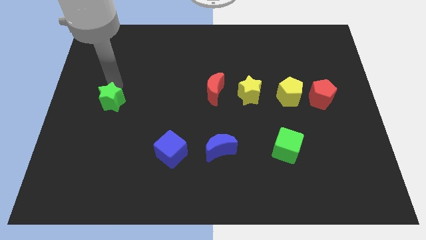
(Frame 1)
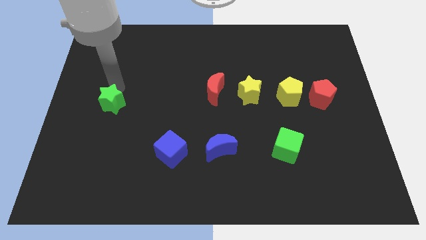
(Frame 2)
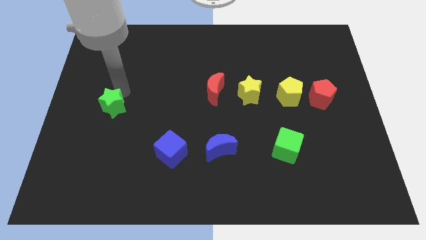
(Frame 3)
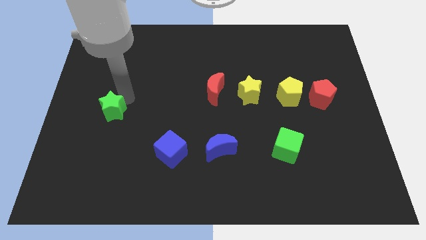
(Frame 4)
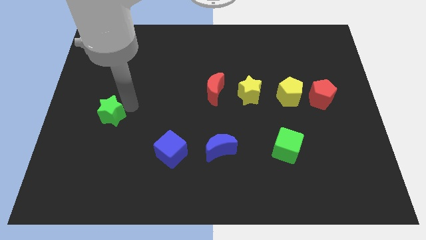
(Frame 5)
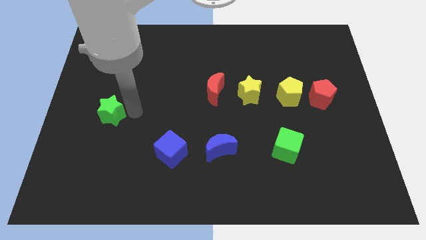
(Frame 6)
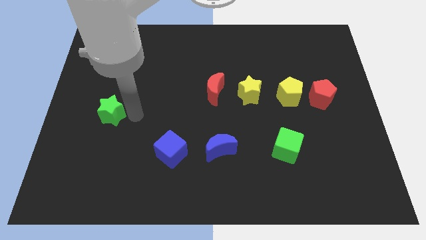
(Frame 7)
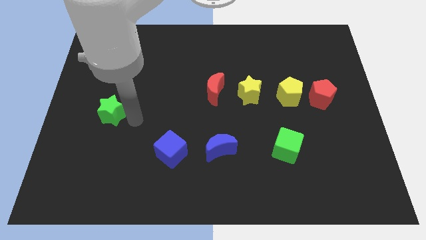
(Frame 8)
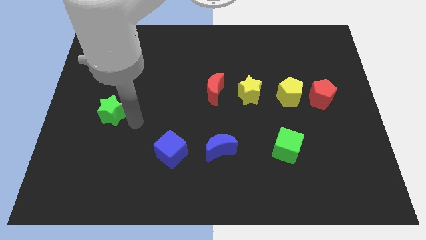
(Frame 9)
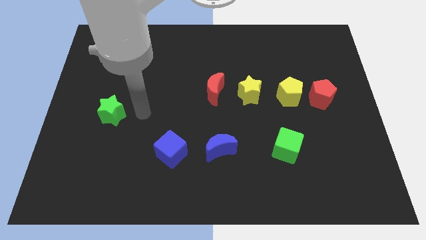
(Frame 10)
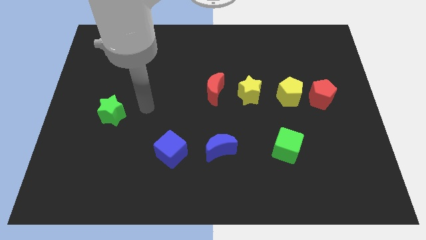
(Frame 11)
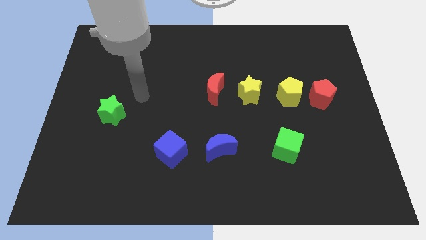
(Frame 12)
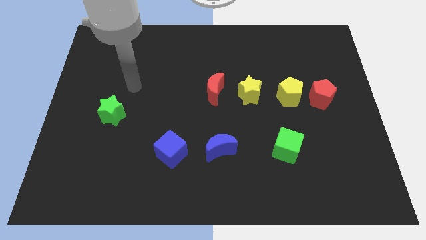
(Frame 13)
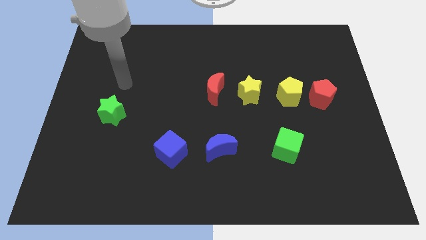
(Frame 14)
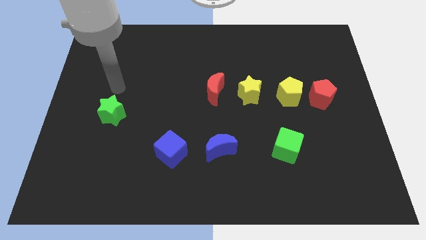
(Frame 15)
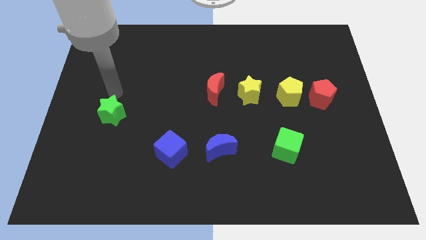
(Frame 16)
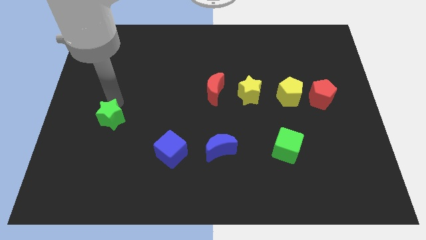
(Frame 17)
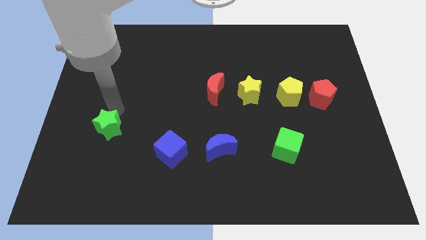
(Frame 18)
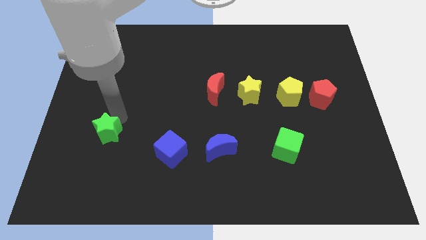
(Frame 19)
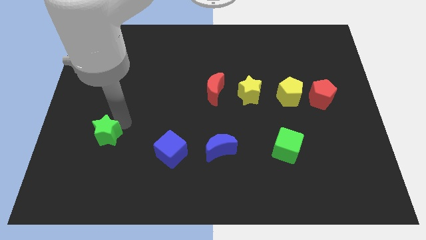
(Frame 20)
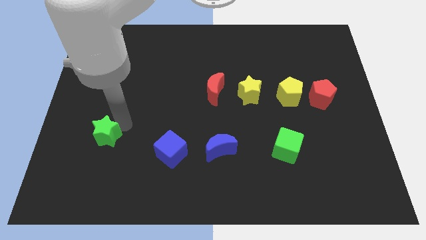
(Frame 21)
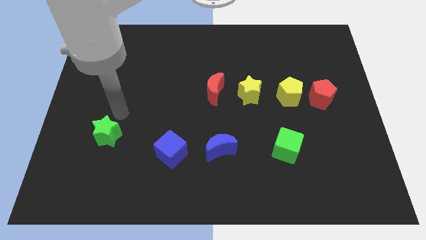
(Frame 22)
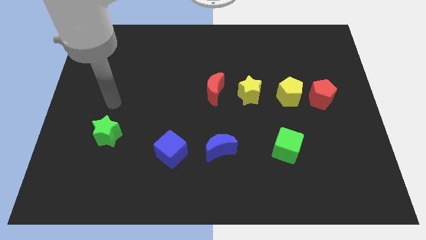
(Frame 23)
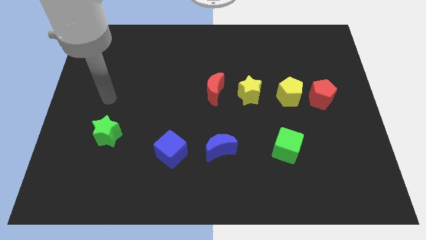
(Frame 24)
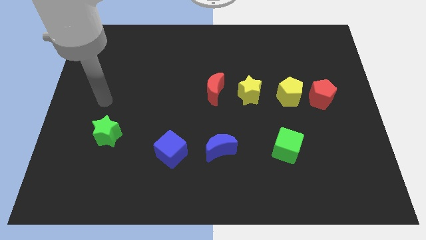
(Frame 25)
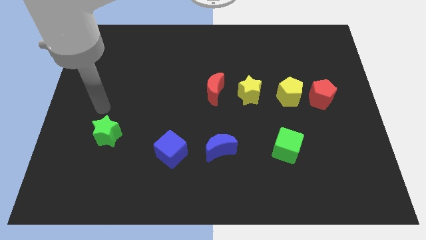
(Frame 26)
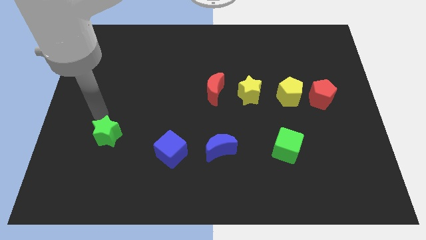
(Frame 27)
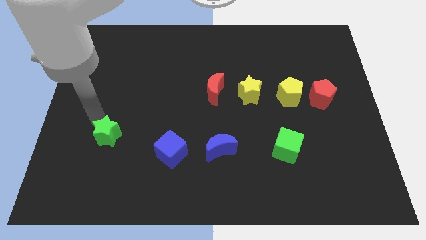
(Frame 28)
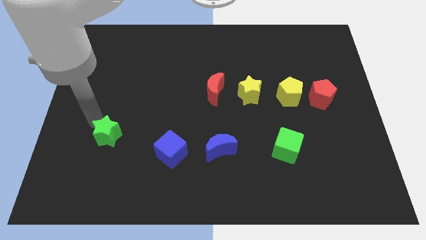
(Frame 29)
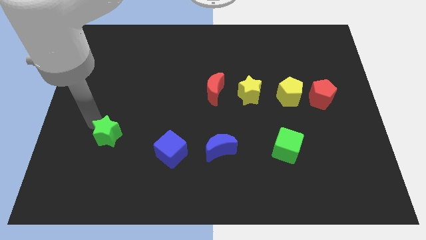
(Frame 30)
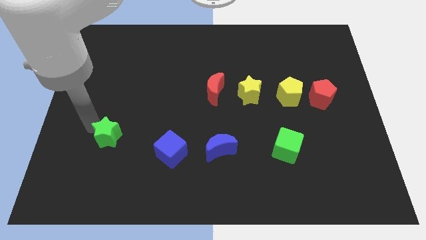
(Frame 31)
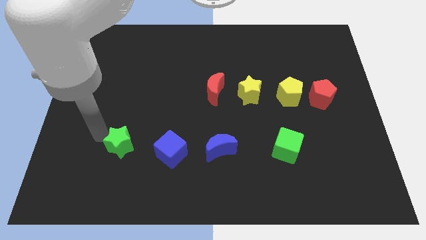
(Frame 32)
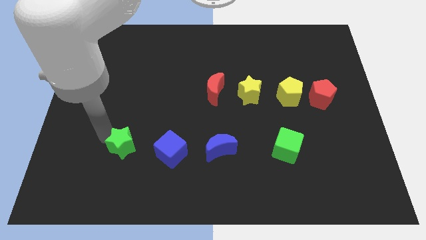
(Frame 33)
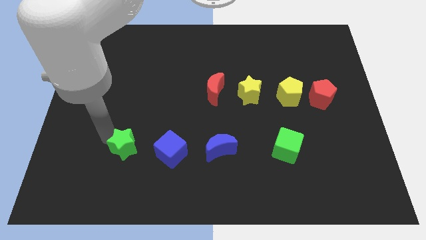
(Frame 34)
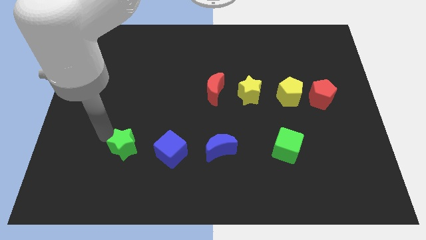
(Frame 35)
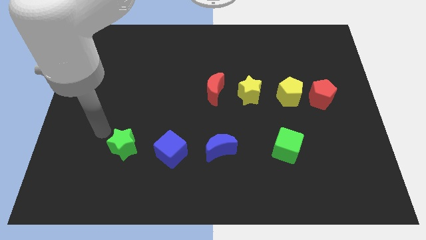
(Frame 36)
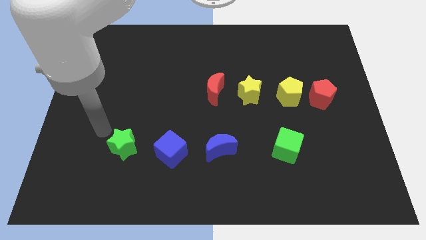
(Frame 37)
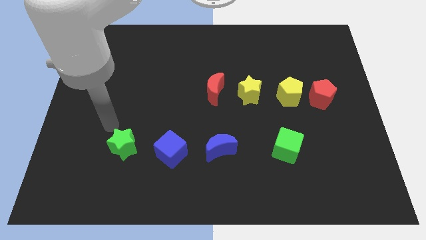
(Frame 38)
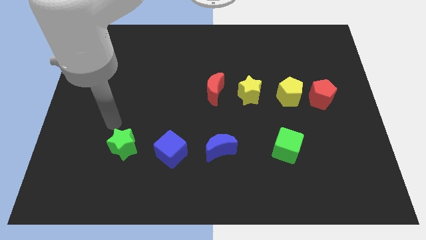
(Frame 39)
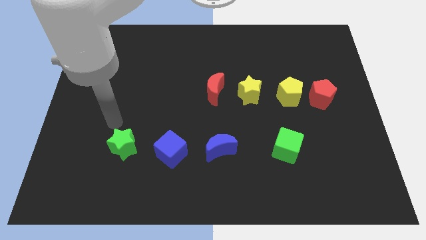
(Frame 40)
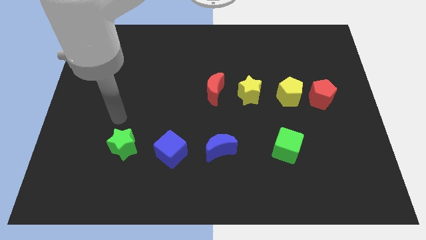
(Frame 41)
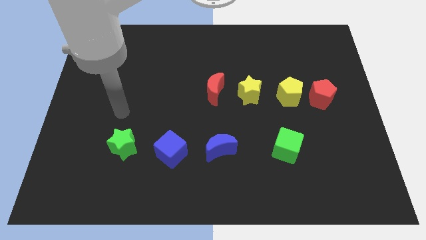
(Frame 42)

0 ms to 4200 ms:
push green star parallel left to the blue cube

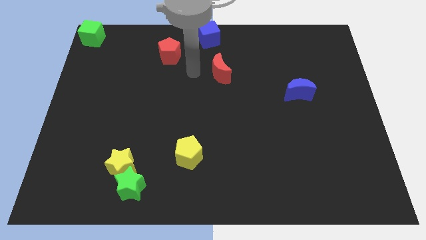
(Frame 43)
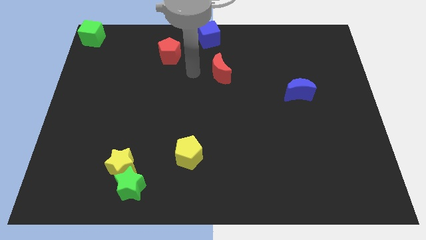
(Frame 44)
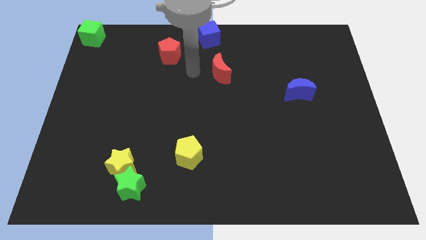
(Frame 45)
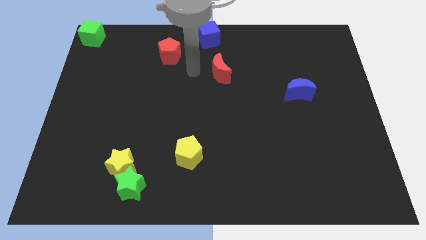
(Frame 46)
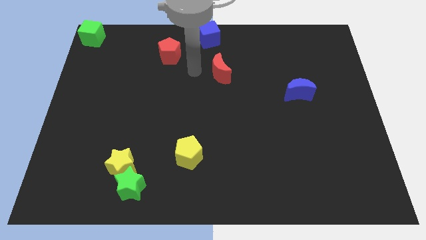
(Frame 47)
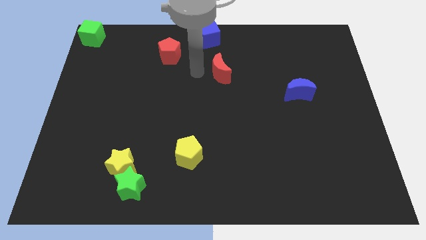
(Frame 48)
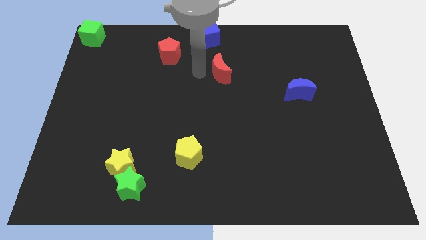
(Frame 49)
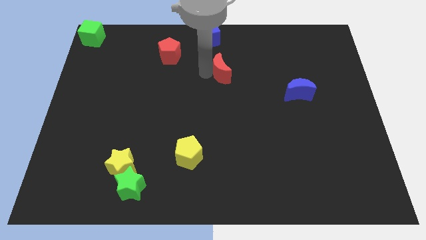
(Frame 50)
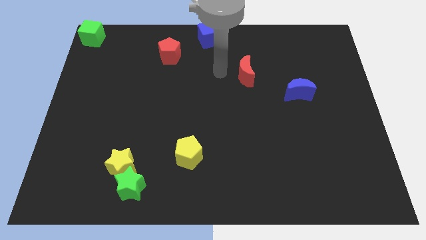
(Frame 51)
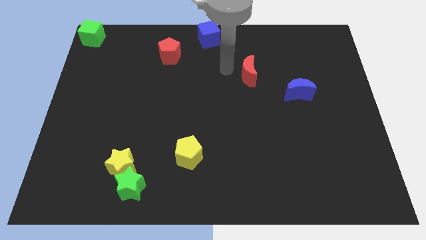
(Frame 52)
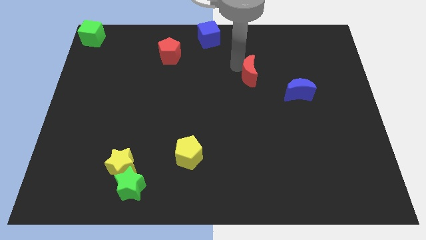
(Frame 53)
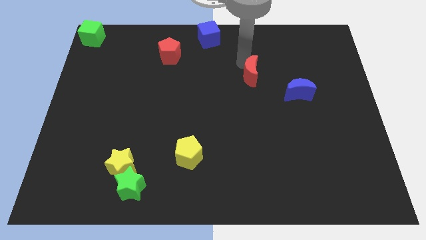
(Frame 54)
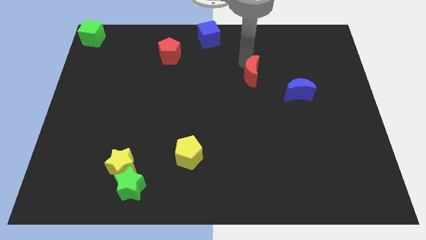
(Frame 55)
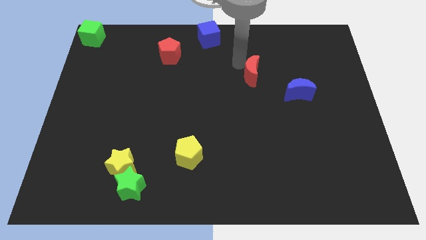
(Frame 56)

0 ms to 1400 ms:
move the red moon towards the right

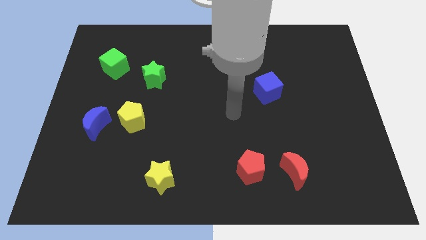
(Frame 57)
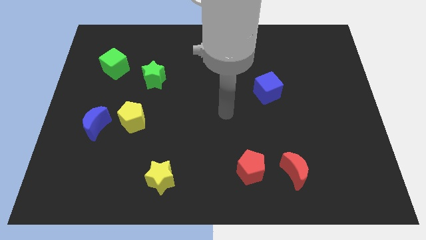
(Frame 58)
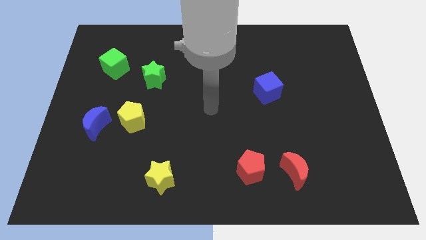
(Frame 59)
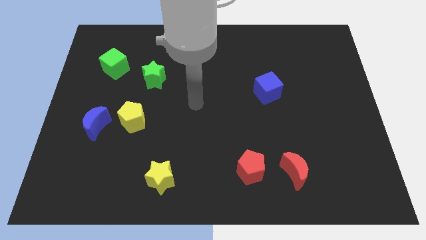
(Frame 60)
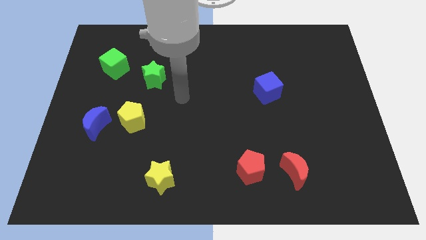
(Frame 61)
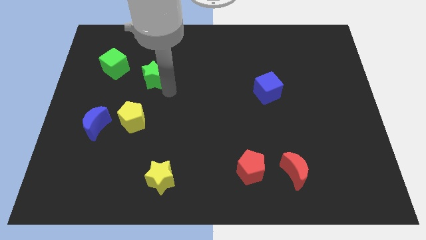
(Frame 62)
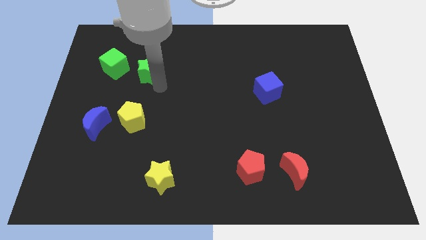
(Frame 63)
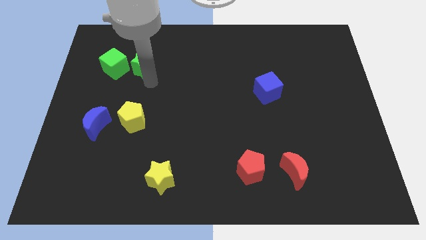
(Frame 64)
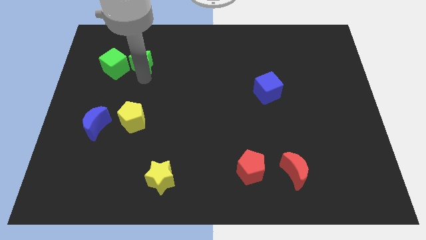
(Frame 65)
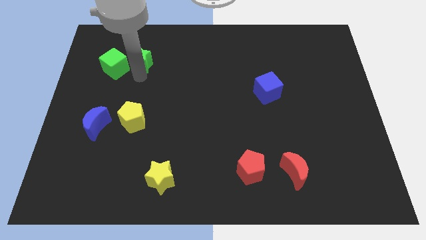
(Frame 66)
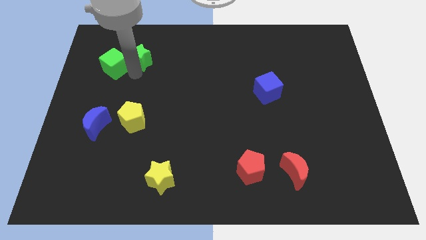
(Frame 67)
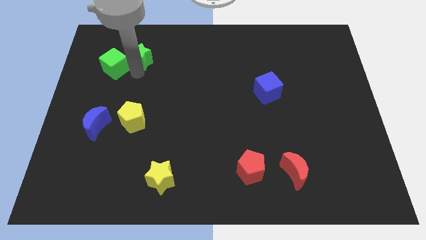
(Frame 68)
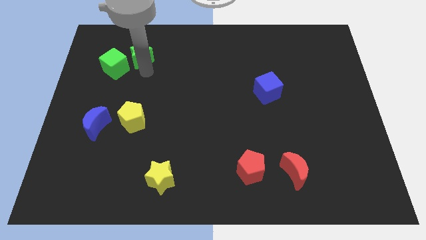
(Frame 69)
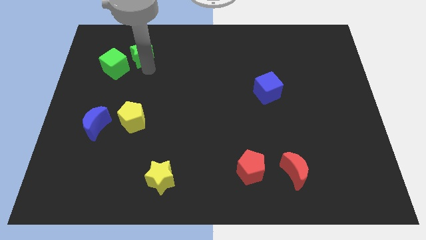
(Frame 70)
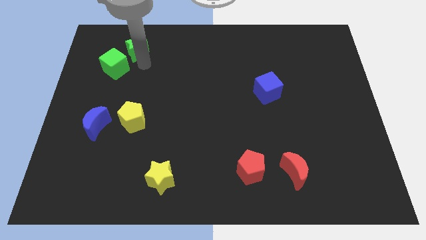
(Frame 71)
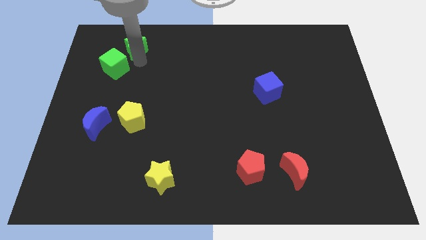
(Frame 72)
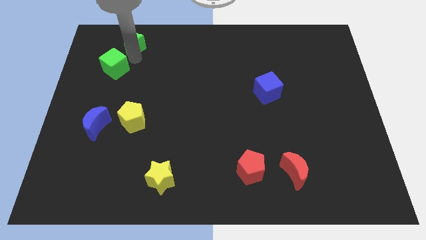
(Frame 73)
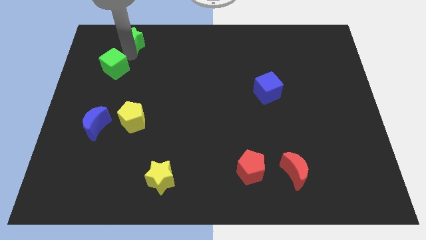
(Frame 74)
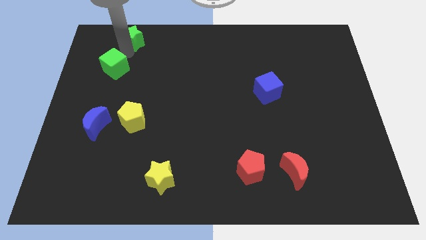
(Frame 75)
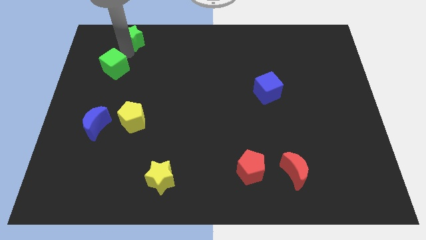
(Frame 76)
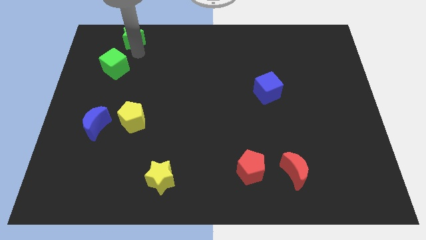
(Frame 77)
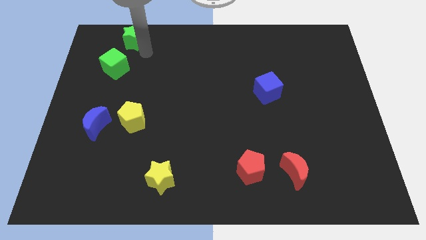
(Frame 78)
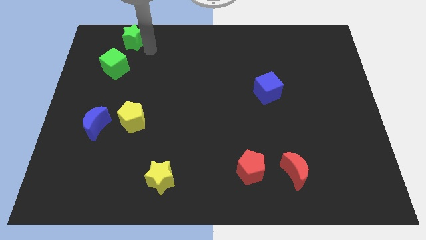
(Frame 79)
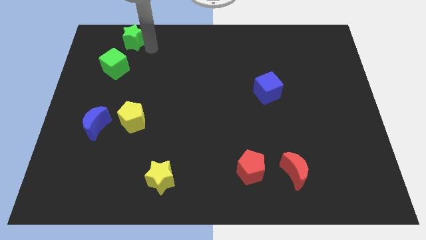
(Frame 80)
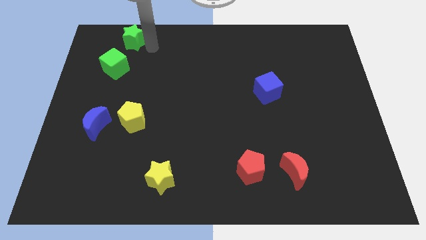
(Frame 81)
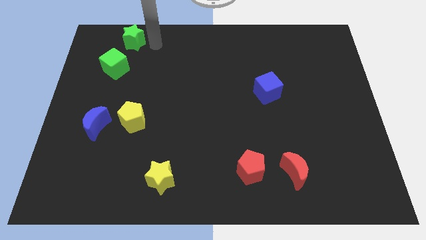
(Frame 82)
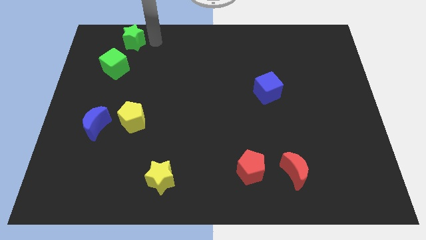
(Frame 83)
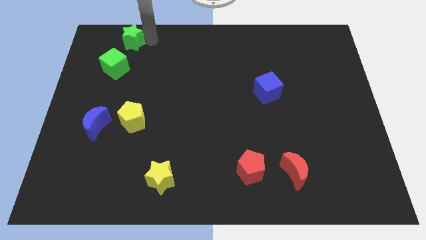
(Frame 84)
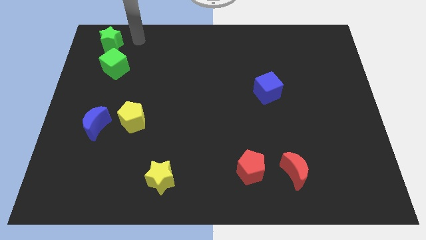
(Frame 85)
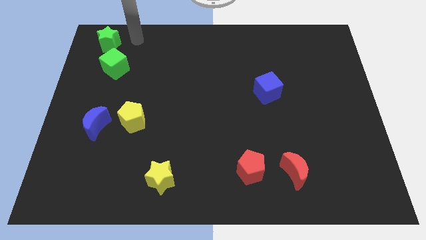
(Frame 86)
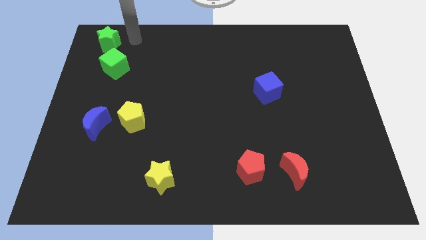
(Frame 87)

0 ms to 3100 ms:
slide the green star to the top side of the green cube

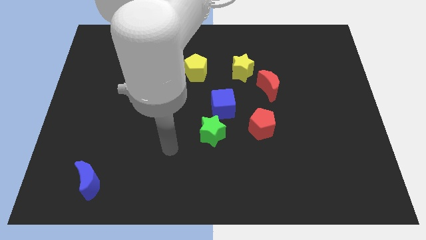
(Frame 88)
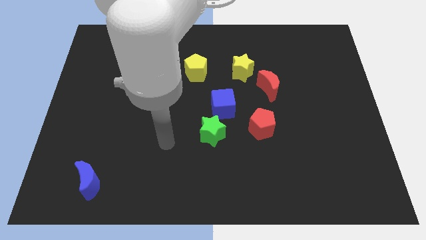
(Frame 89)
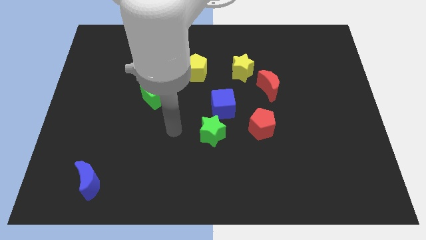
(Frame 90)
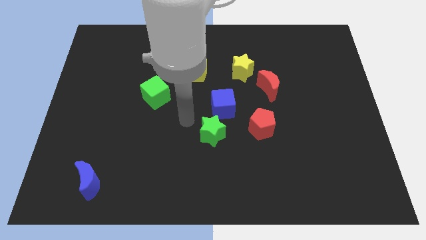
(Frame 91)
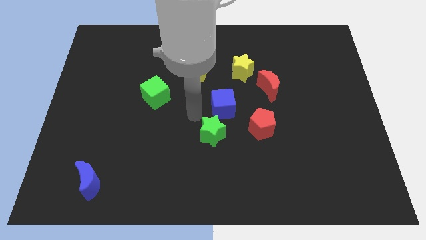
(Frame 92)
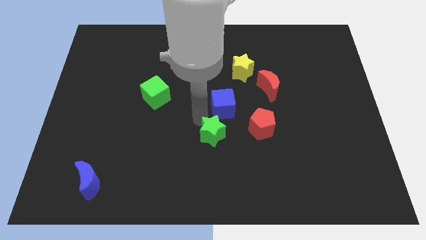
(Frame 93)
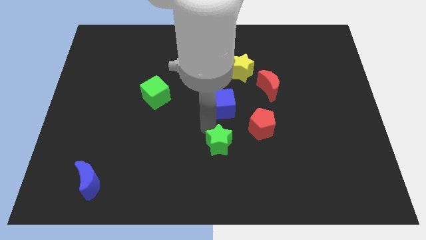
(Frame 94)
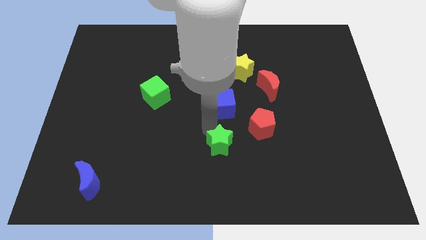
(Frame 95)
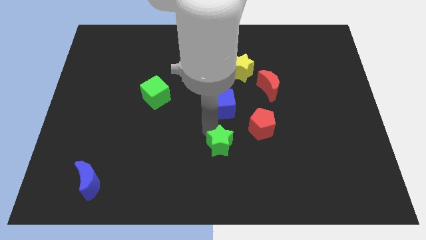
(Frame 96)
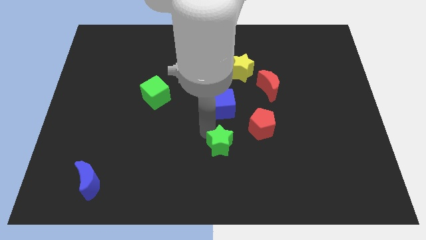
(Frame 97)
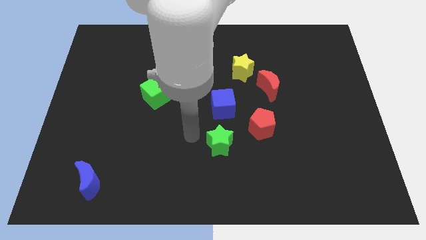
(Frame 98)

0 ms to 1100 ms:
put the green star below the blue cube
